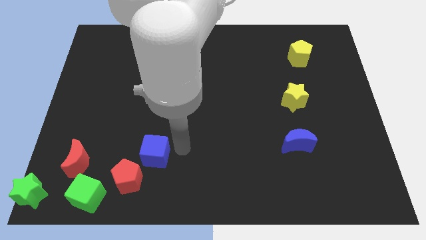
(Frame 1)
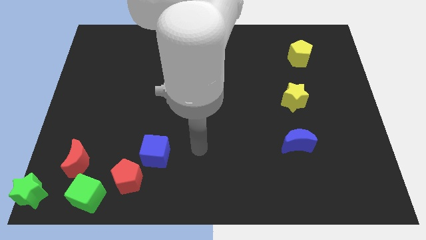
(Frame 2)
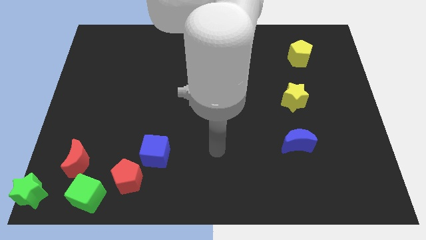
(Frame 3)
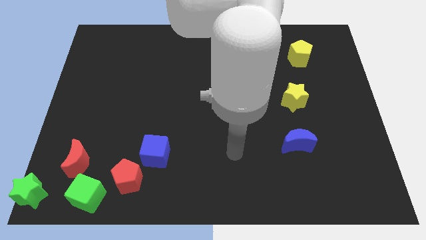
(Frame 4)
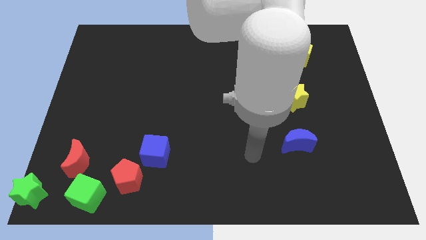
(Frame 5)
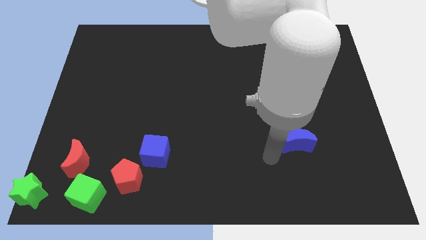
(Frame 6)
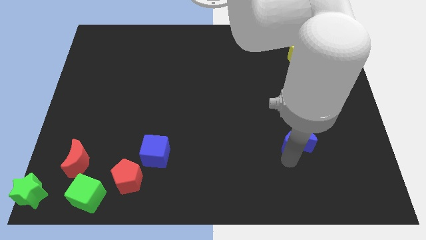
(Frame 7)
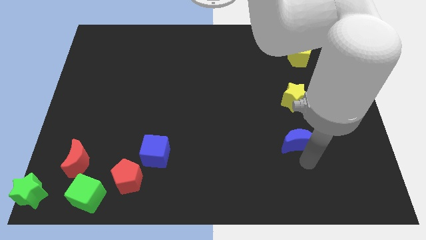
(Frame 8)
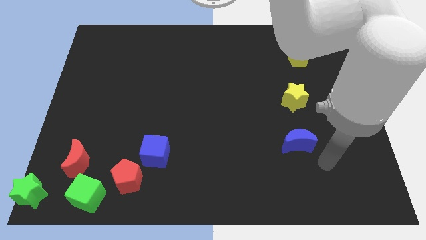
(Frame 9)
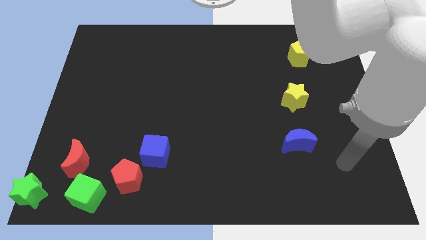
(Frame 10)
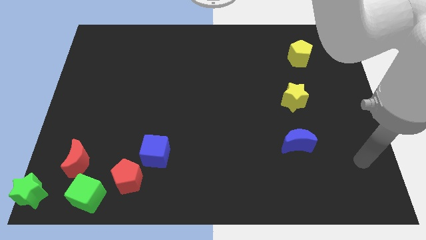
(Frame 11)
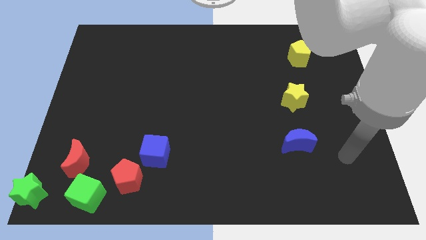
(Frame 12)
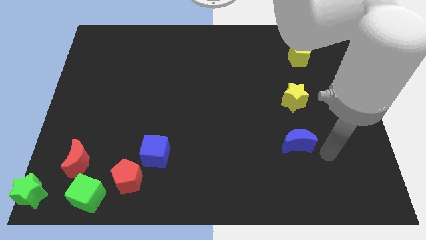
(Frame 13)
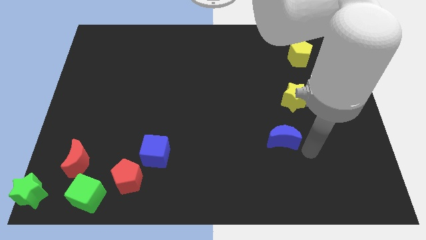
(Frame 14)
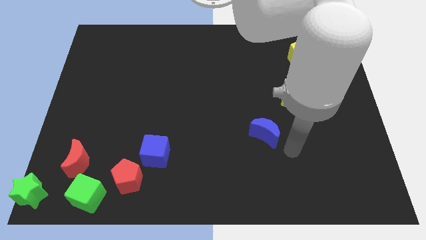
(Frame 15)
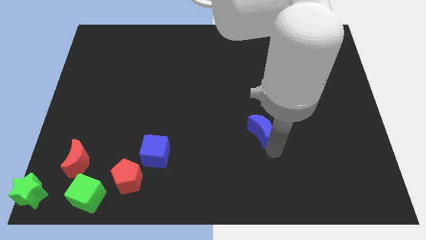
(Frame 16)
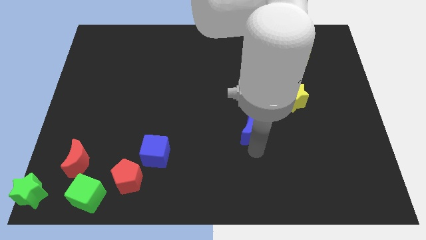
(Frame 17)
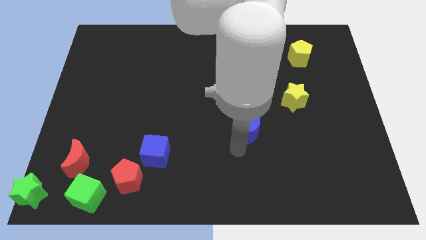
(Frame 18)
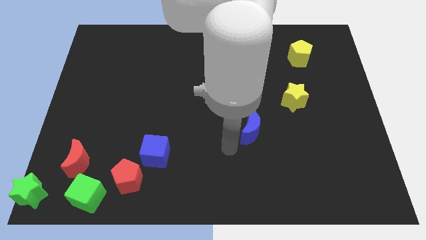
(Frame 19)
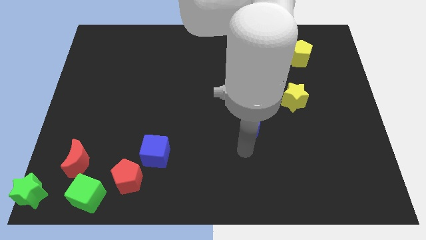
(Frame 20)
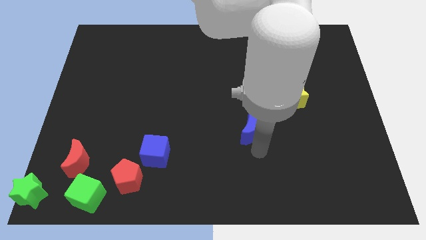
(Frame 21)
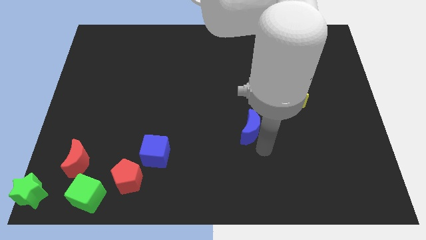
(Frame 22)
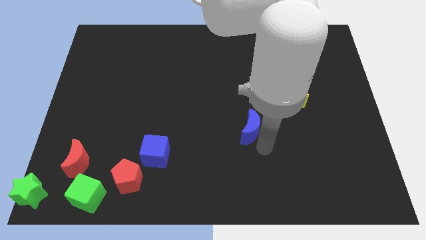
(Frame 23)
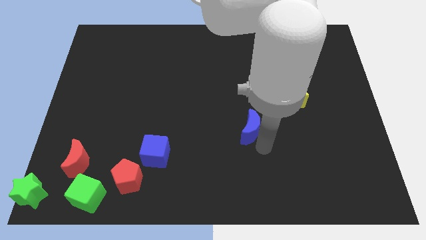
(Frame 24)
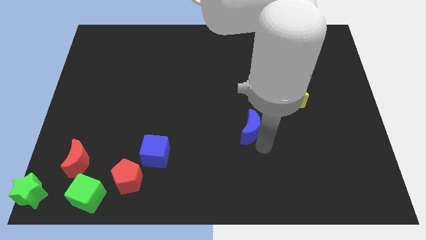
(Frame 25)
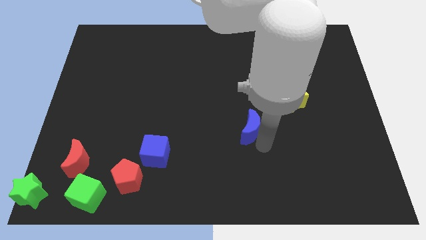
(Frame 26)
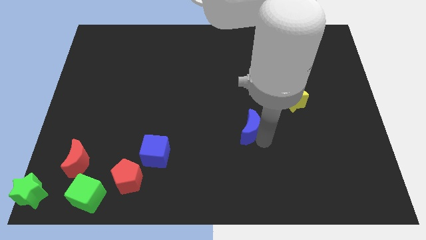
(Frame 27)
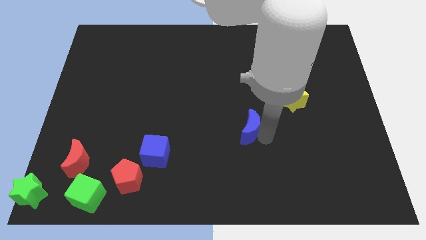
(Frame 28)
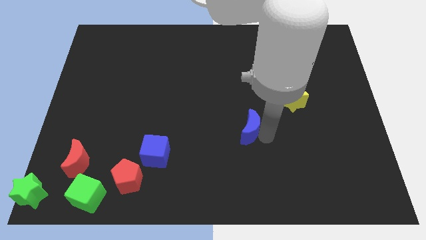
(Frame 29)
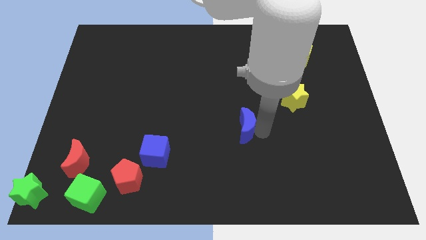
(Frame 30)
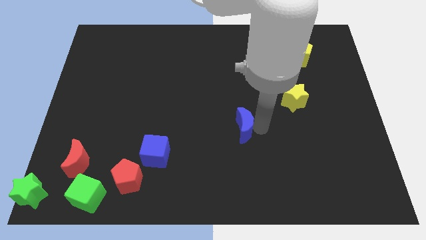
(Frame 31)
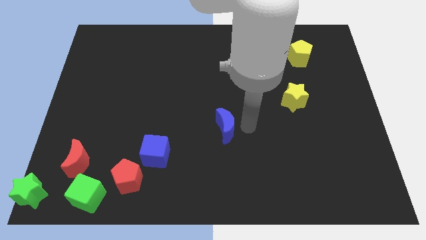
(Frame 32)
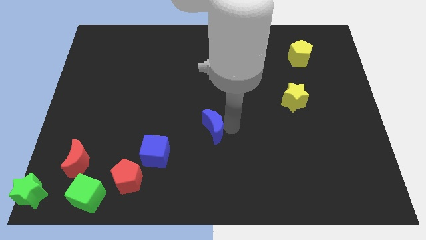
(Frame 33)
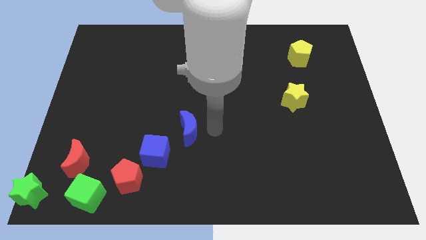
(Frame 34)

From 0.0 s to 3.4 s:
push the blue moon to the center of the board

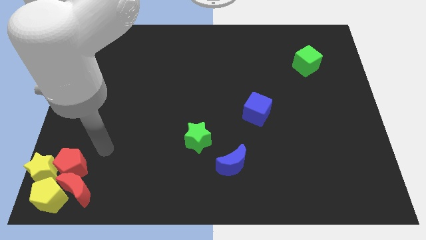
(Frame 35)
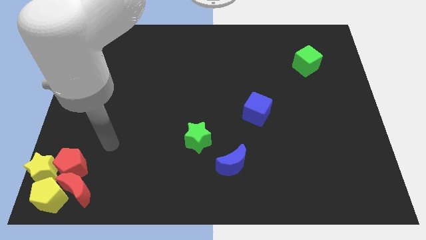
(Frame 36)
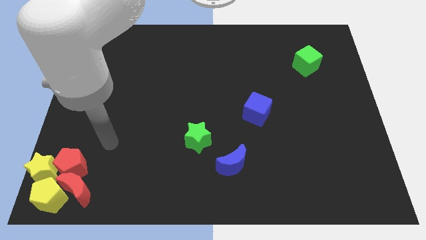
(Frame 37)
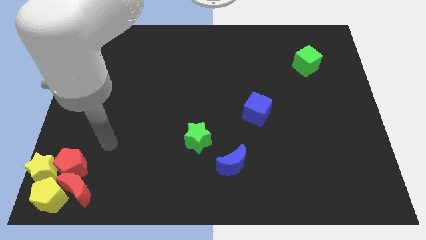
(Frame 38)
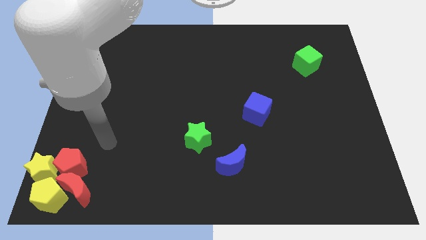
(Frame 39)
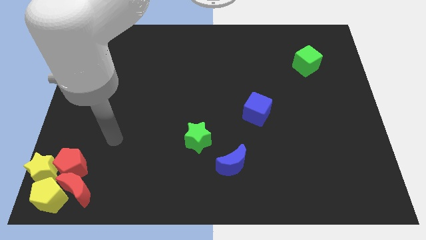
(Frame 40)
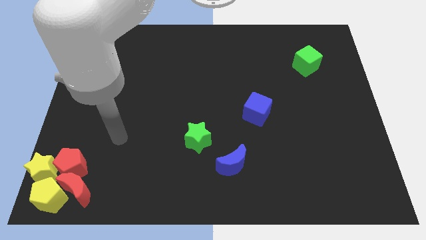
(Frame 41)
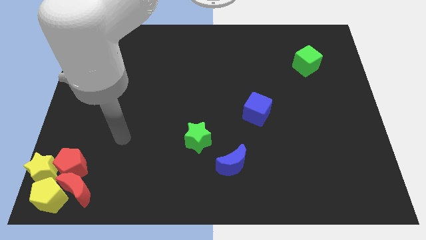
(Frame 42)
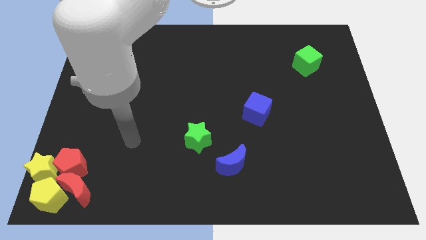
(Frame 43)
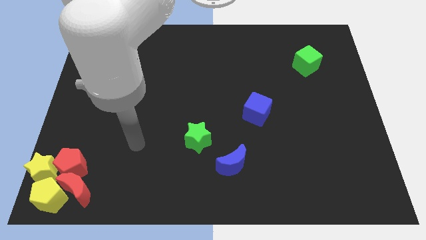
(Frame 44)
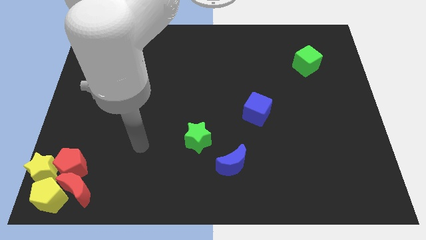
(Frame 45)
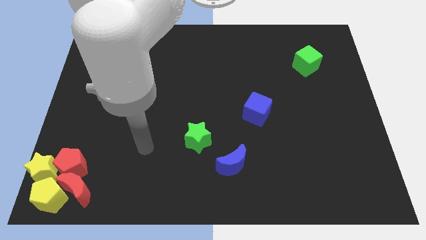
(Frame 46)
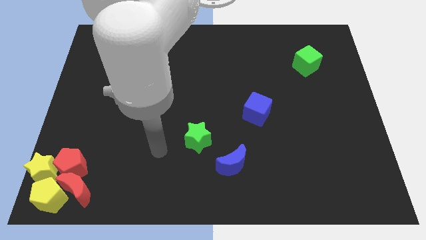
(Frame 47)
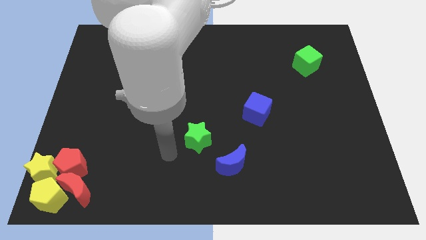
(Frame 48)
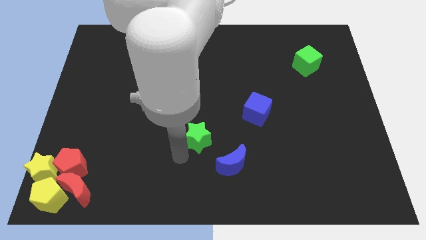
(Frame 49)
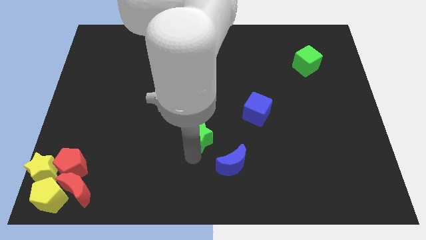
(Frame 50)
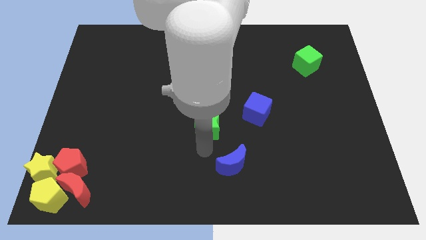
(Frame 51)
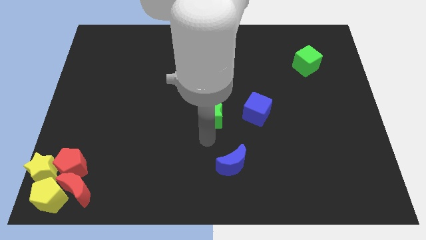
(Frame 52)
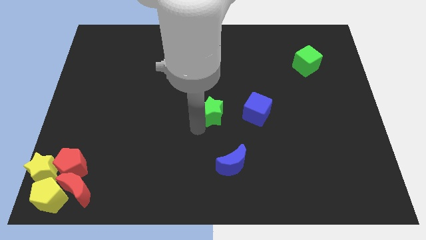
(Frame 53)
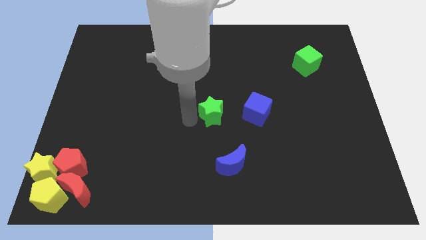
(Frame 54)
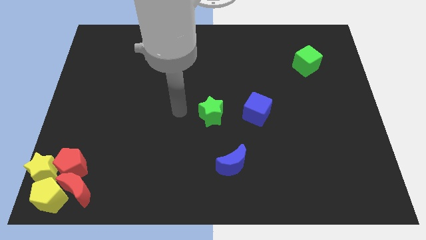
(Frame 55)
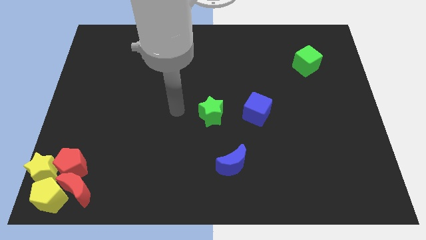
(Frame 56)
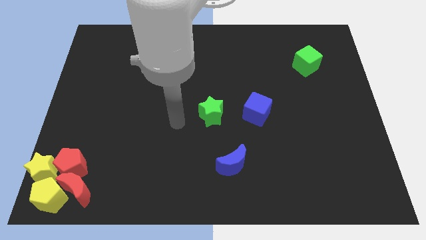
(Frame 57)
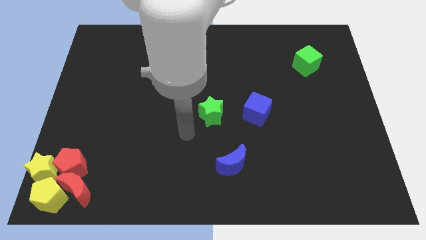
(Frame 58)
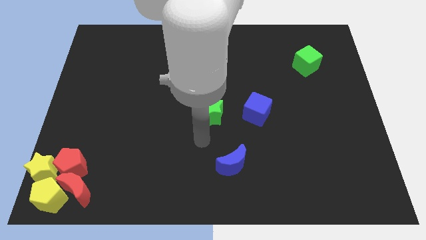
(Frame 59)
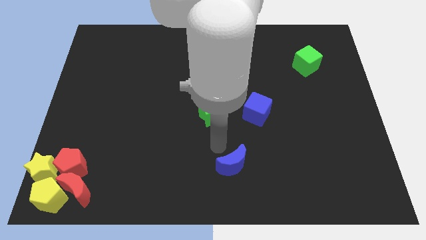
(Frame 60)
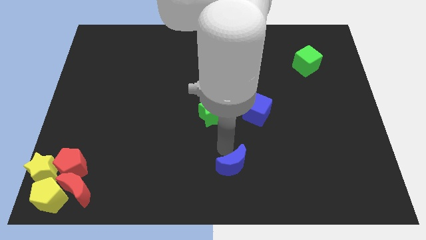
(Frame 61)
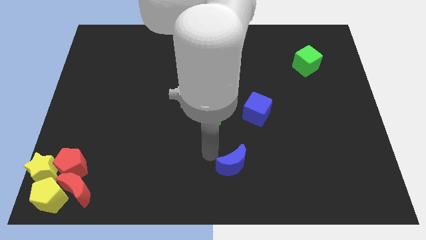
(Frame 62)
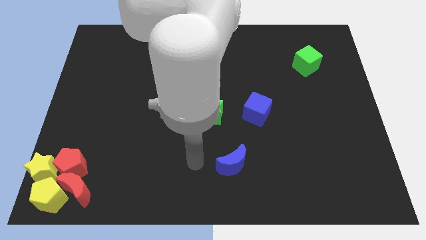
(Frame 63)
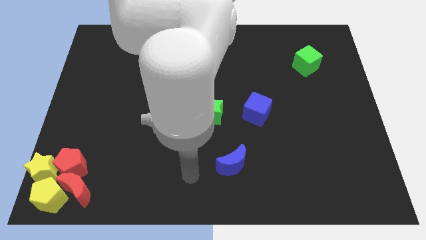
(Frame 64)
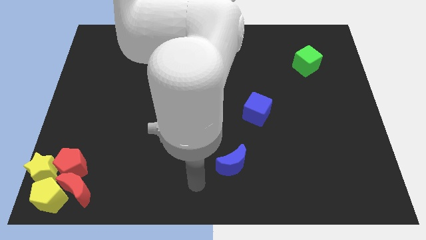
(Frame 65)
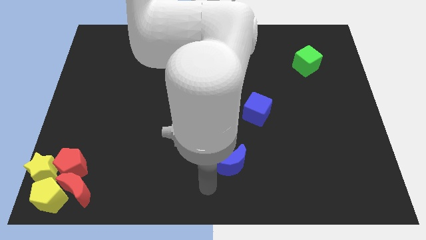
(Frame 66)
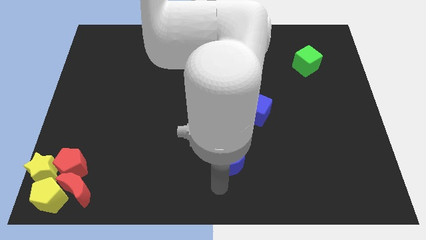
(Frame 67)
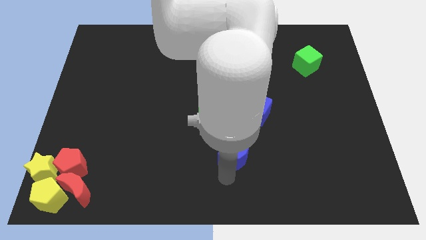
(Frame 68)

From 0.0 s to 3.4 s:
push the green star to the left of the blue cube

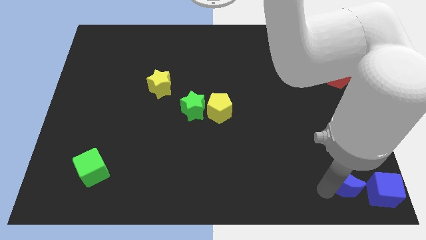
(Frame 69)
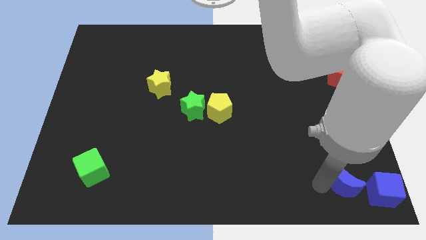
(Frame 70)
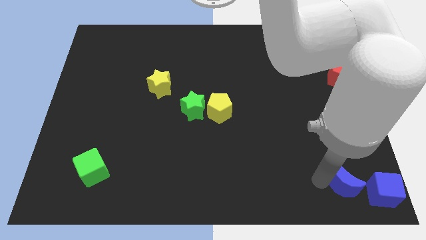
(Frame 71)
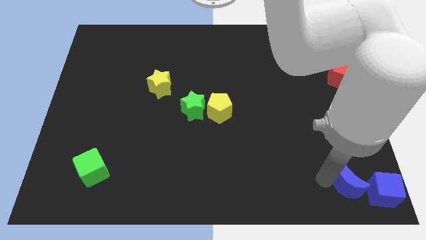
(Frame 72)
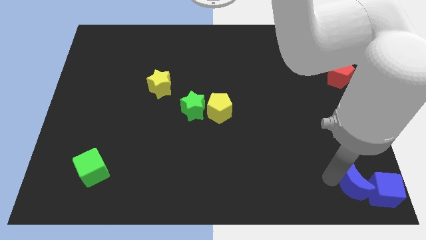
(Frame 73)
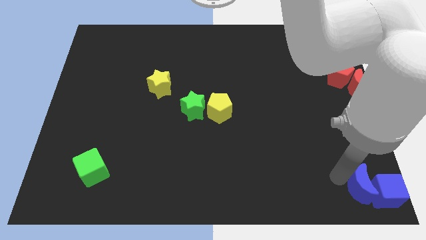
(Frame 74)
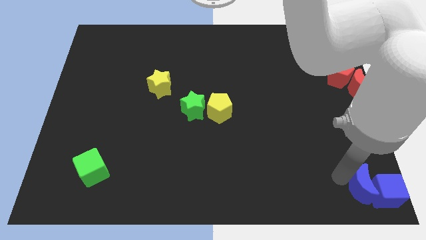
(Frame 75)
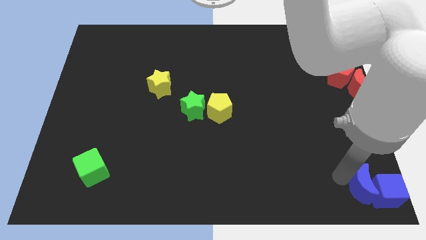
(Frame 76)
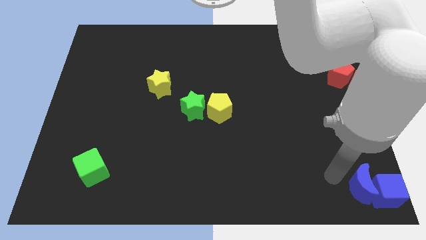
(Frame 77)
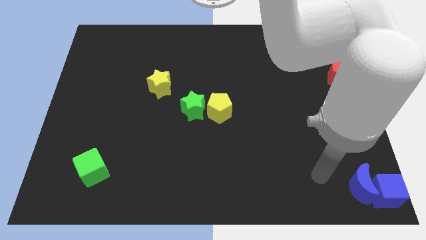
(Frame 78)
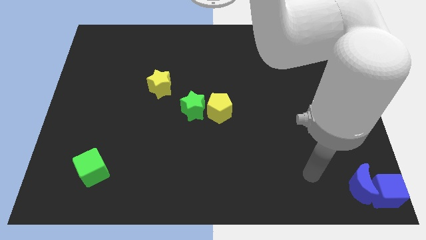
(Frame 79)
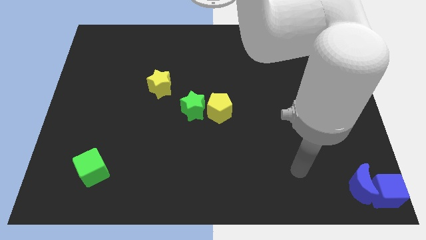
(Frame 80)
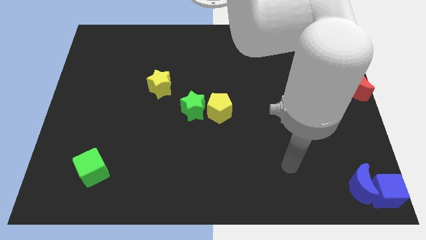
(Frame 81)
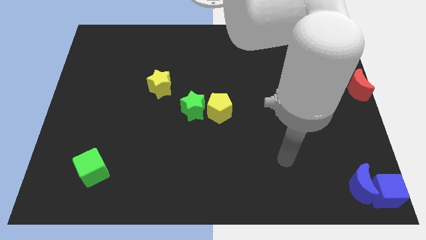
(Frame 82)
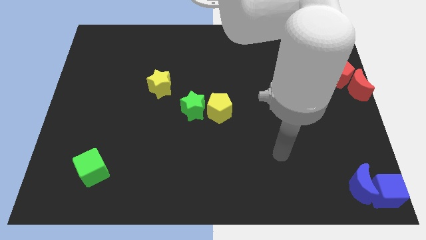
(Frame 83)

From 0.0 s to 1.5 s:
move the blue crescent to the left of the blue cube

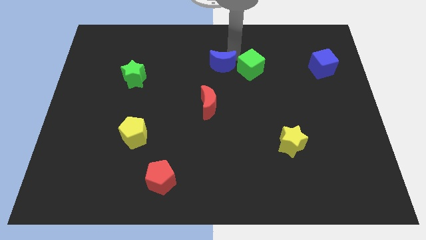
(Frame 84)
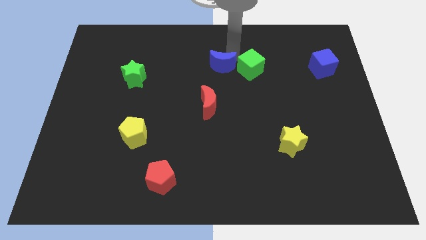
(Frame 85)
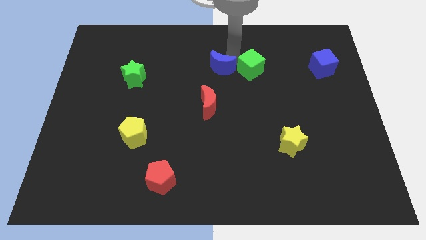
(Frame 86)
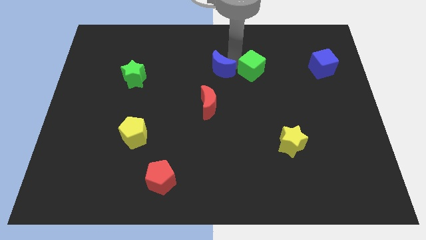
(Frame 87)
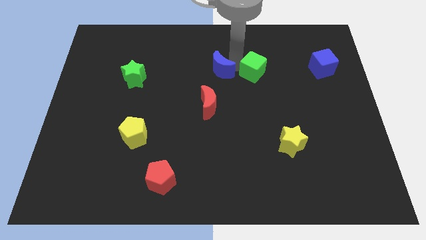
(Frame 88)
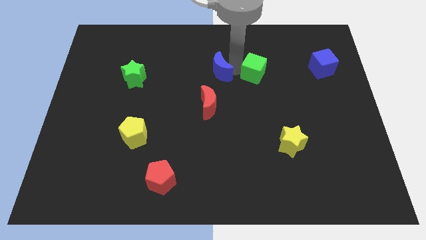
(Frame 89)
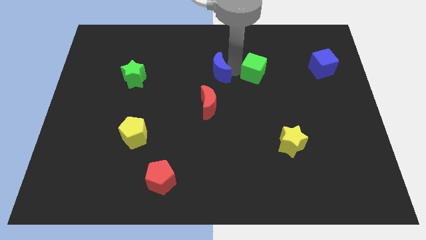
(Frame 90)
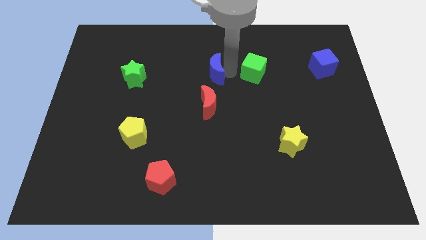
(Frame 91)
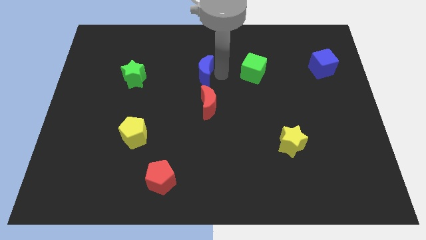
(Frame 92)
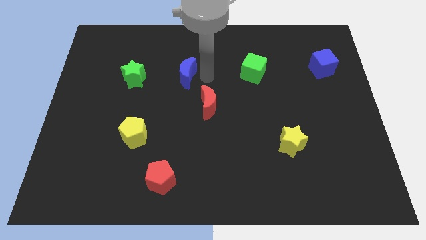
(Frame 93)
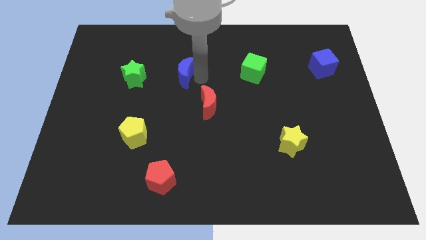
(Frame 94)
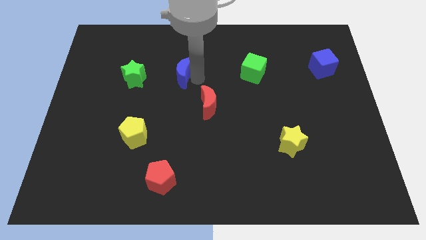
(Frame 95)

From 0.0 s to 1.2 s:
separate the blue crescent from the green cube
